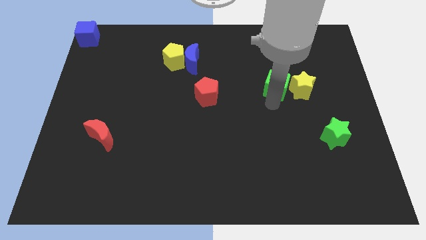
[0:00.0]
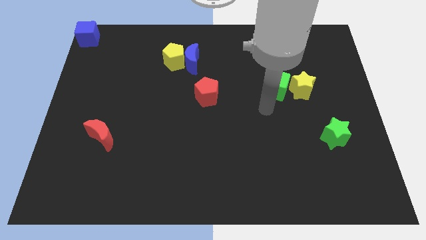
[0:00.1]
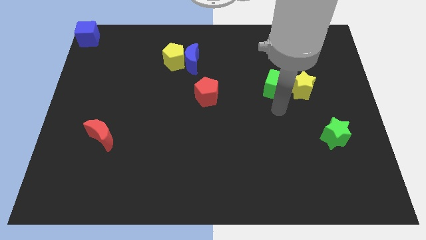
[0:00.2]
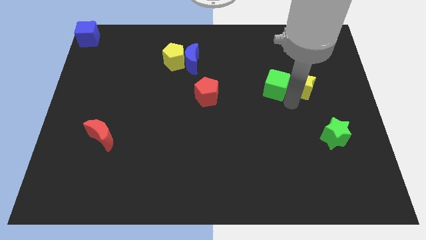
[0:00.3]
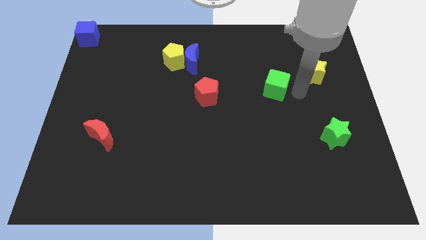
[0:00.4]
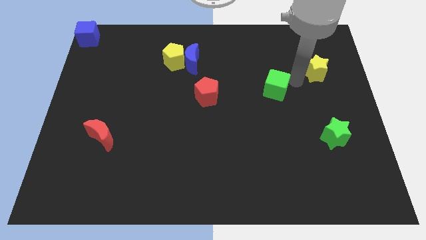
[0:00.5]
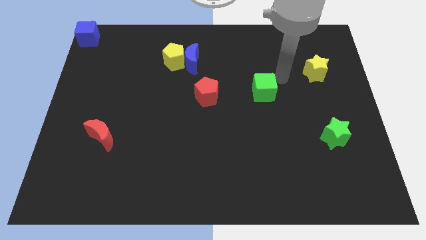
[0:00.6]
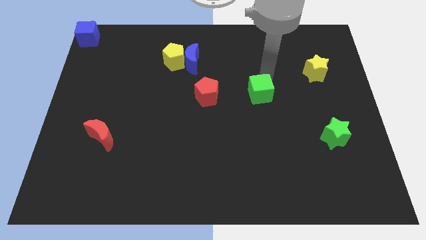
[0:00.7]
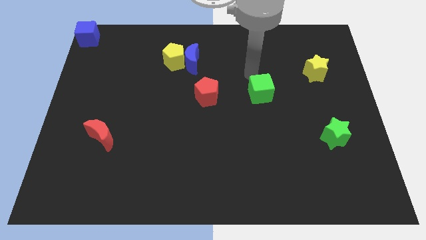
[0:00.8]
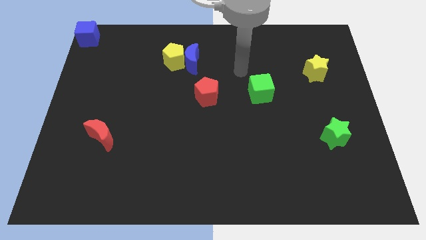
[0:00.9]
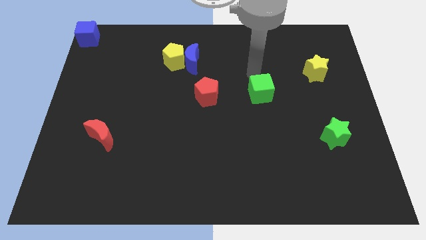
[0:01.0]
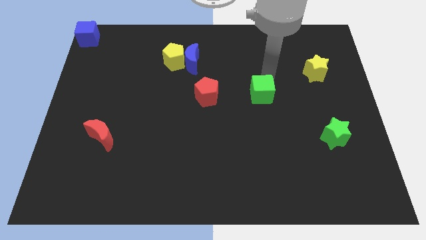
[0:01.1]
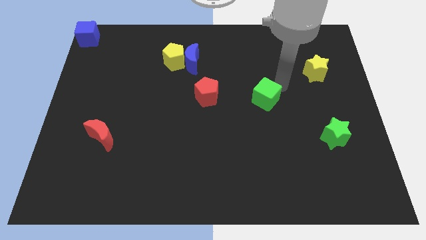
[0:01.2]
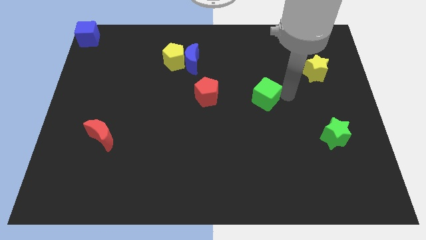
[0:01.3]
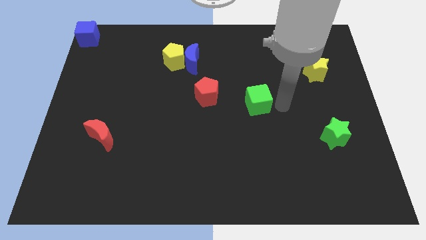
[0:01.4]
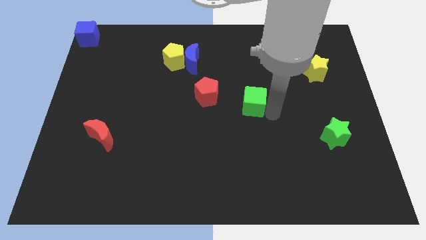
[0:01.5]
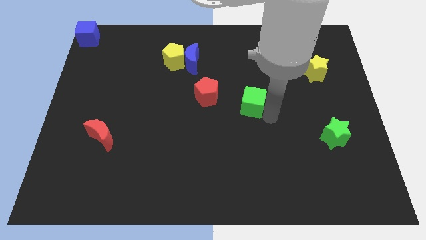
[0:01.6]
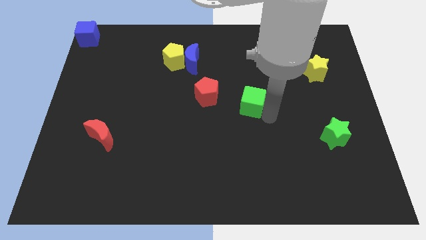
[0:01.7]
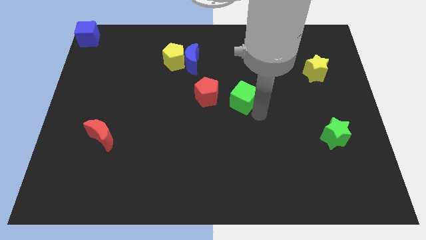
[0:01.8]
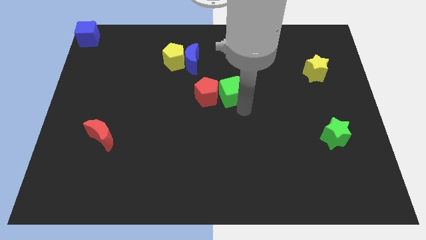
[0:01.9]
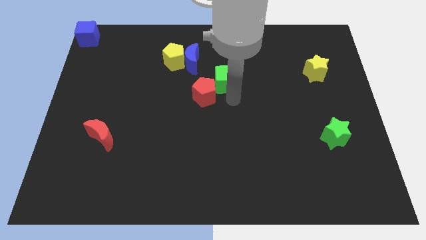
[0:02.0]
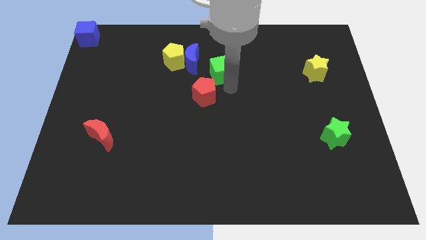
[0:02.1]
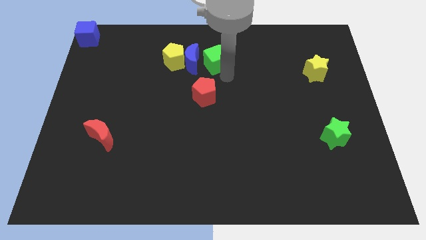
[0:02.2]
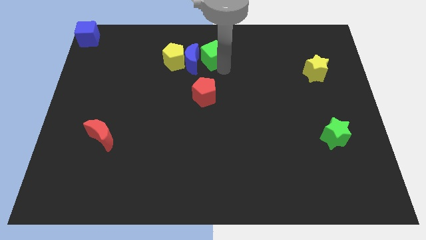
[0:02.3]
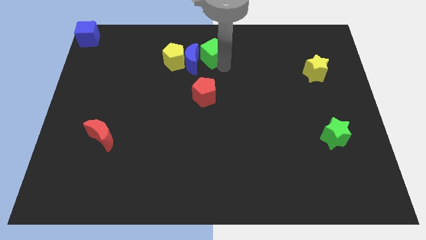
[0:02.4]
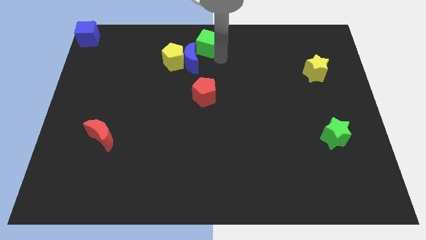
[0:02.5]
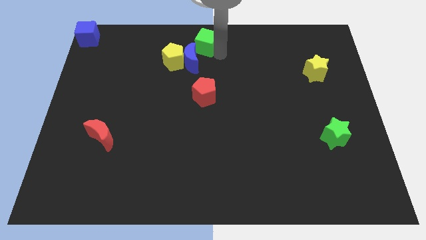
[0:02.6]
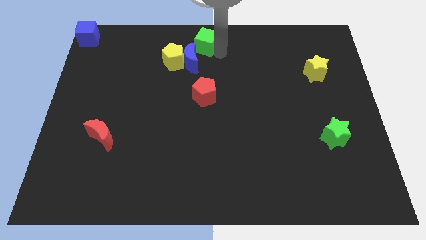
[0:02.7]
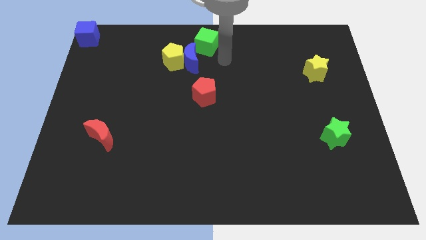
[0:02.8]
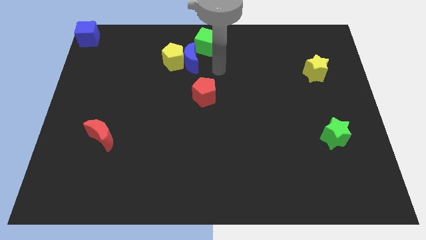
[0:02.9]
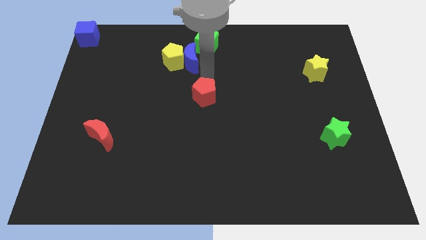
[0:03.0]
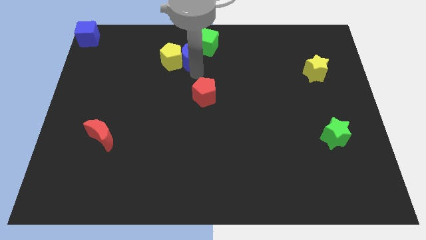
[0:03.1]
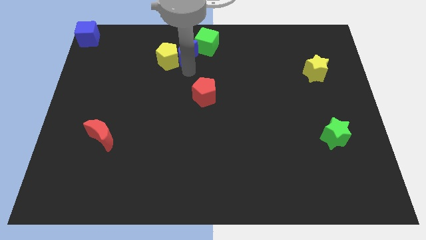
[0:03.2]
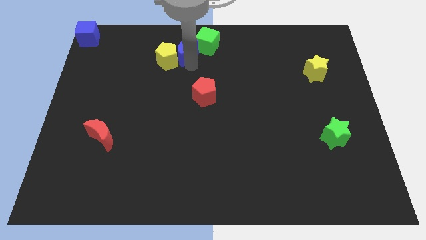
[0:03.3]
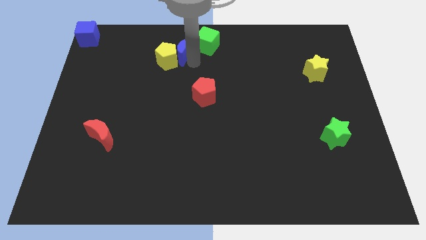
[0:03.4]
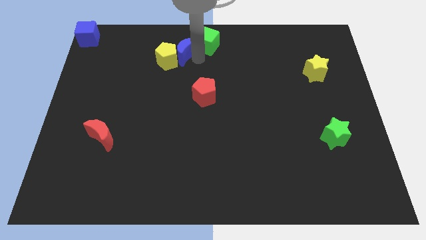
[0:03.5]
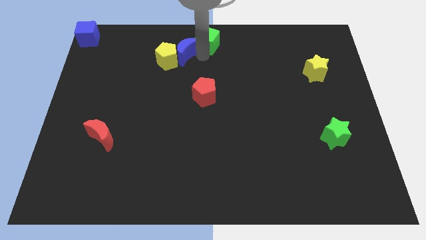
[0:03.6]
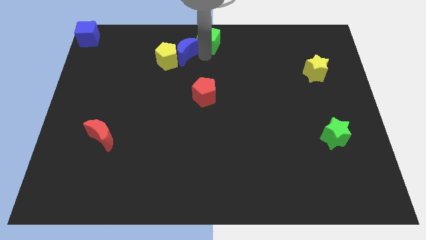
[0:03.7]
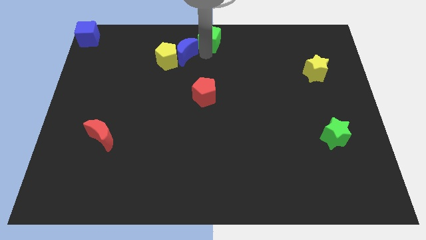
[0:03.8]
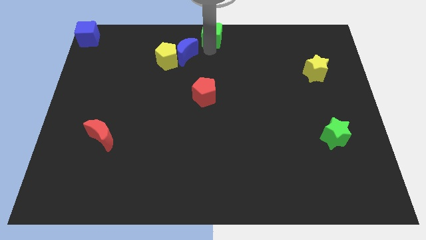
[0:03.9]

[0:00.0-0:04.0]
move the green cube to the top center

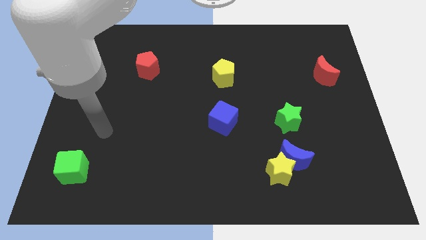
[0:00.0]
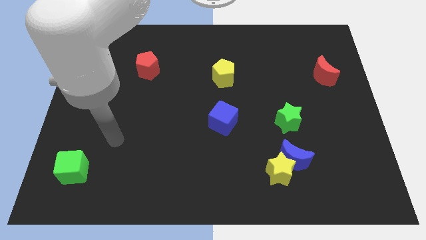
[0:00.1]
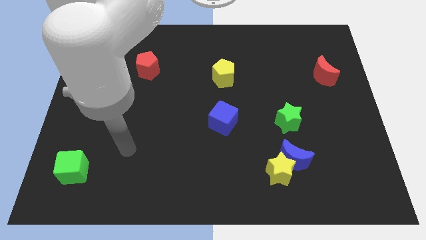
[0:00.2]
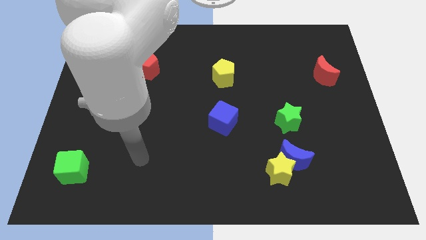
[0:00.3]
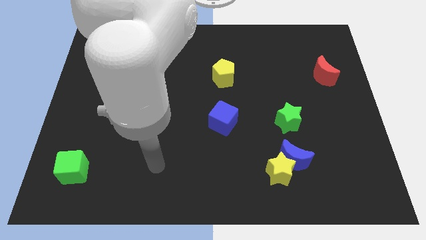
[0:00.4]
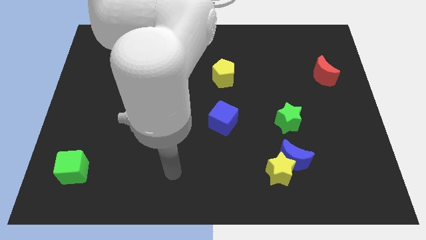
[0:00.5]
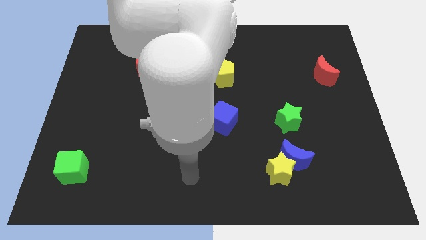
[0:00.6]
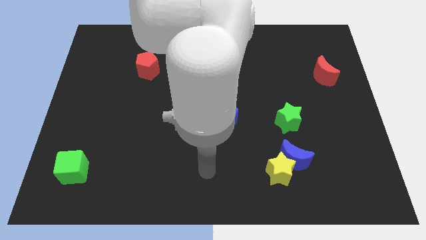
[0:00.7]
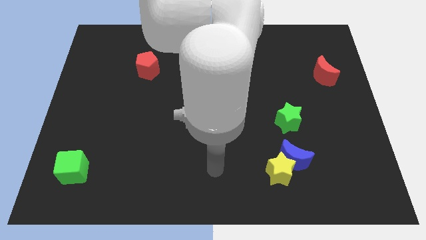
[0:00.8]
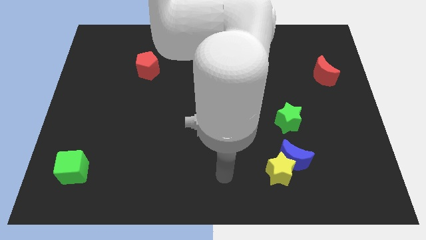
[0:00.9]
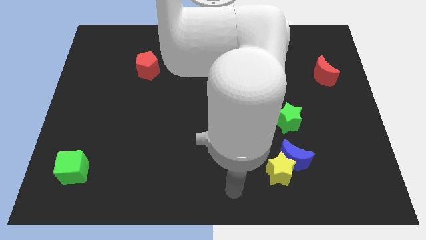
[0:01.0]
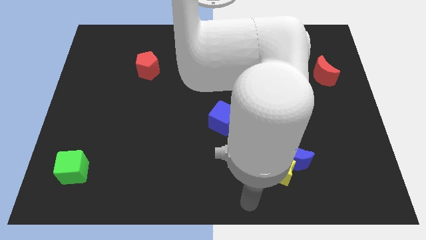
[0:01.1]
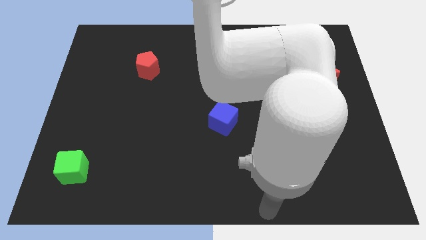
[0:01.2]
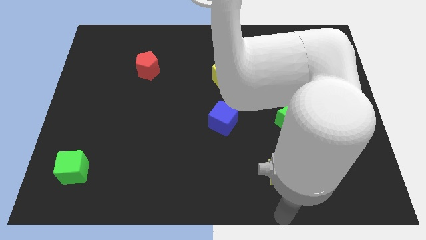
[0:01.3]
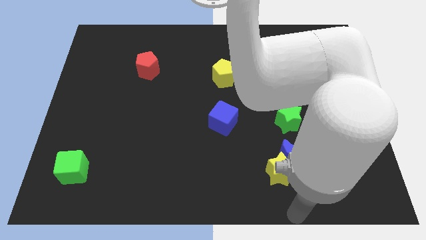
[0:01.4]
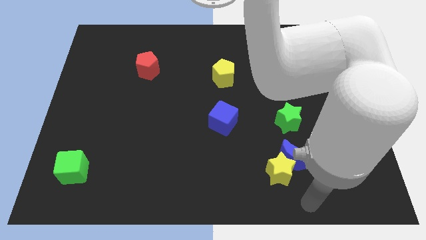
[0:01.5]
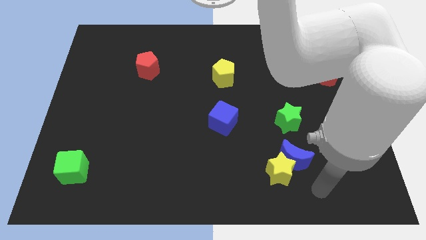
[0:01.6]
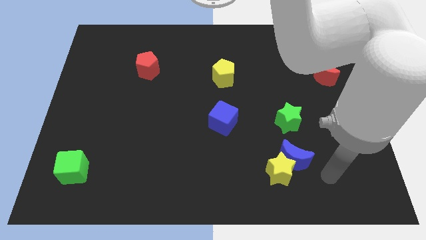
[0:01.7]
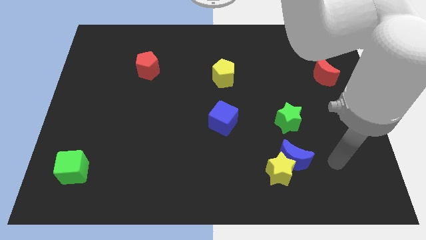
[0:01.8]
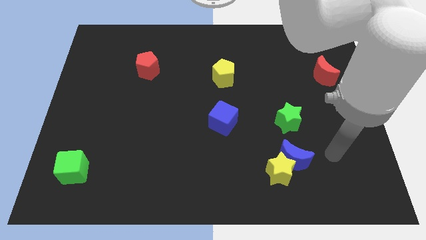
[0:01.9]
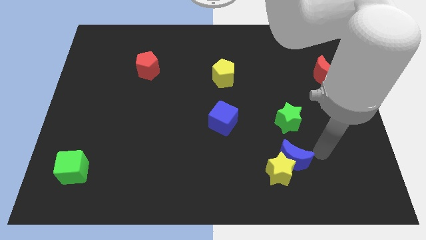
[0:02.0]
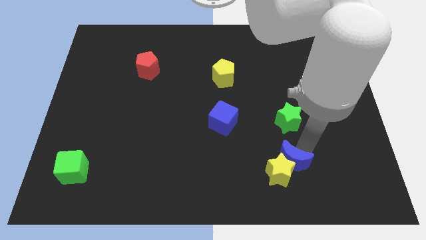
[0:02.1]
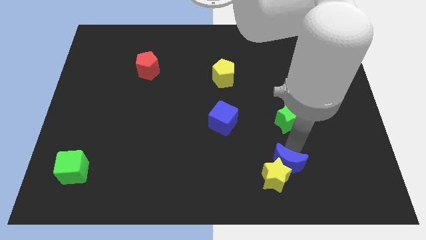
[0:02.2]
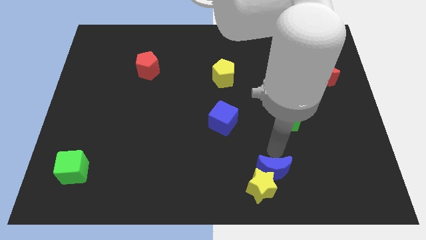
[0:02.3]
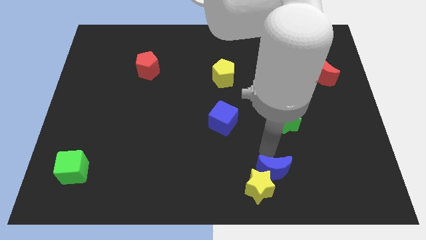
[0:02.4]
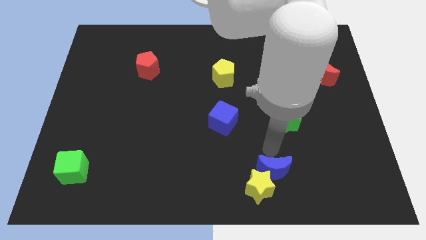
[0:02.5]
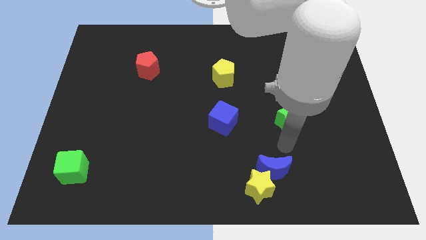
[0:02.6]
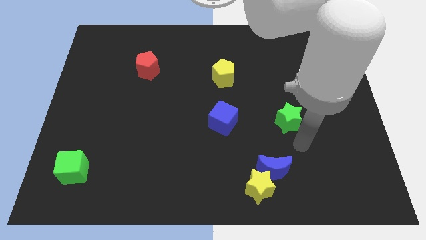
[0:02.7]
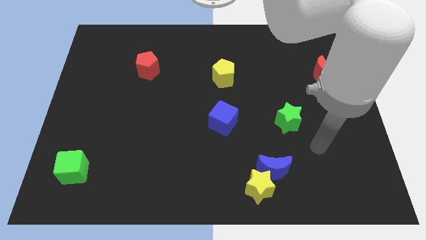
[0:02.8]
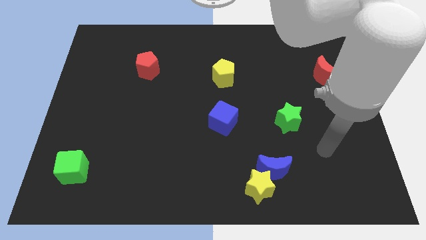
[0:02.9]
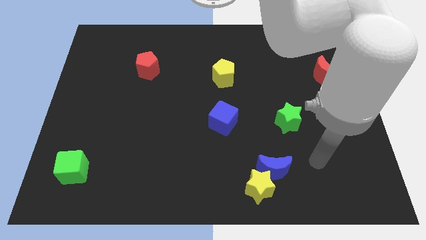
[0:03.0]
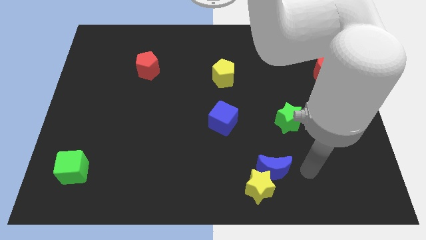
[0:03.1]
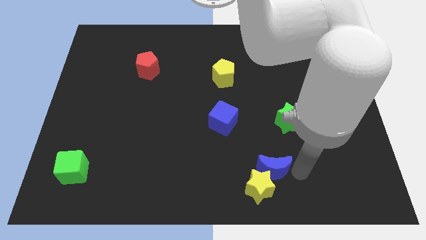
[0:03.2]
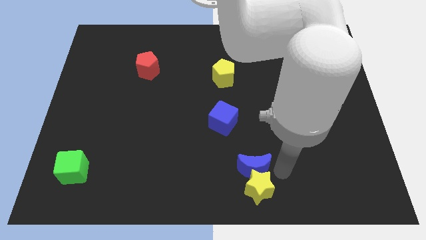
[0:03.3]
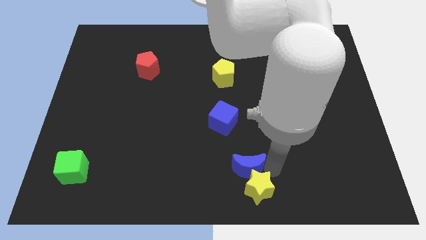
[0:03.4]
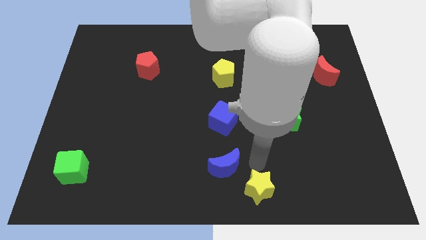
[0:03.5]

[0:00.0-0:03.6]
move the blue crescent and yellow star towards the bottom

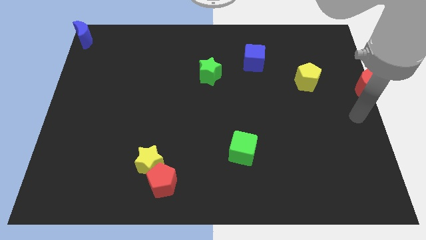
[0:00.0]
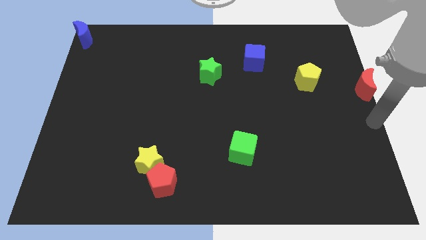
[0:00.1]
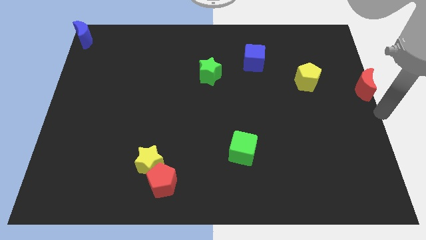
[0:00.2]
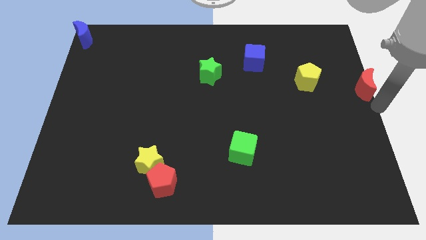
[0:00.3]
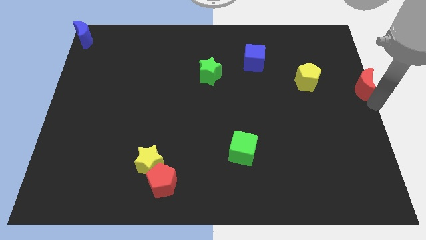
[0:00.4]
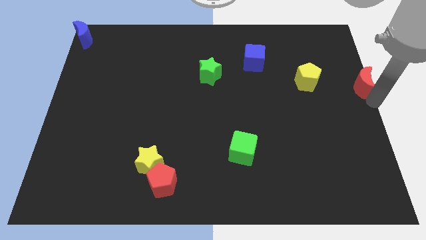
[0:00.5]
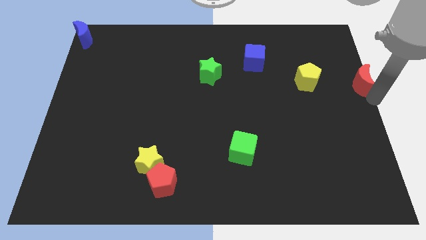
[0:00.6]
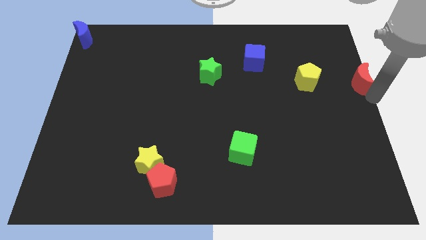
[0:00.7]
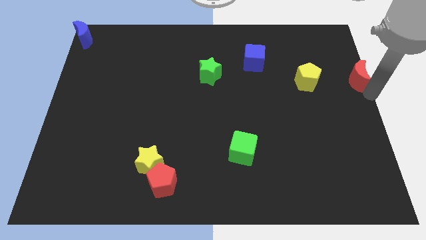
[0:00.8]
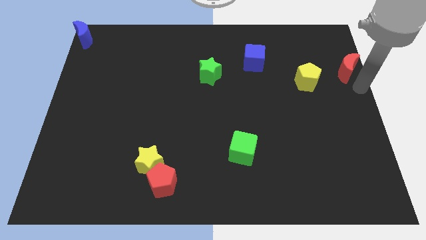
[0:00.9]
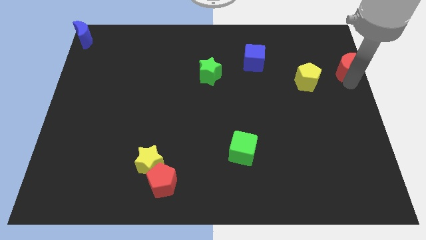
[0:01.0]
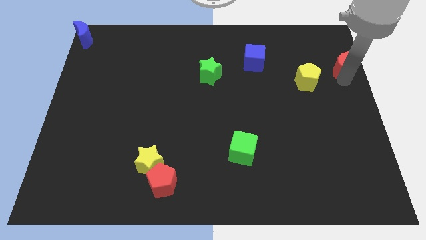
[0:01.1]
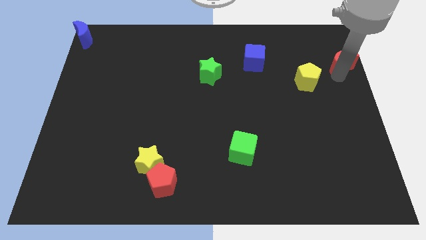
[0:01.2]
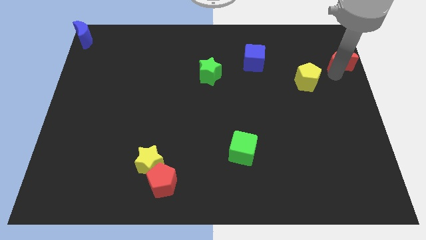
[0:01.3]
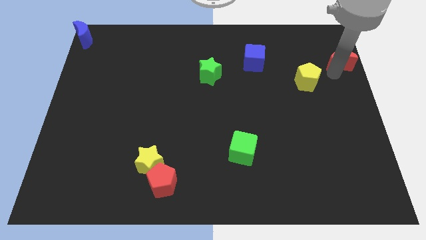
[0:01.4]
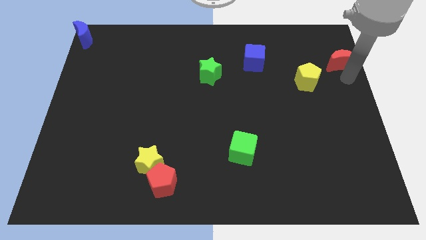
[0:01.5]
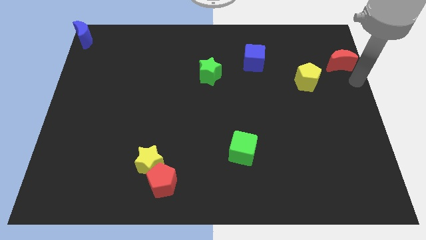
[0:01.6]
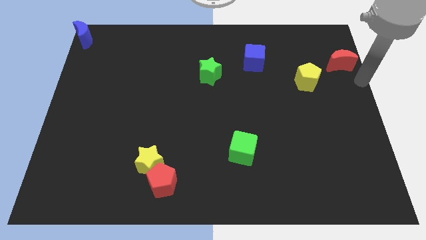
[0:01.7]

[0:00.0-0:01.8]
put the red moon diagonally to yellow pentagon
